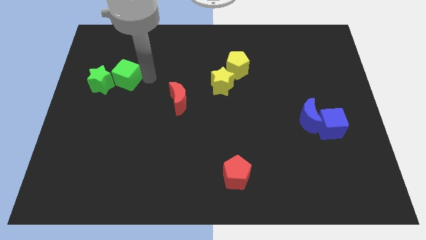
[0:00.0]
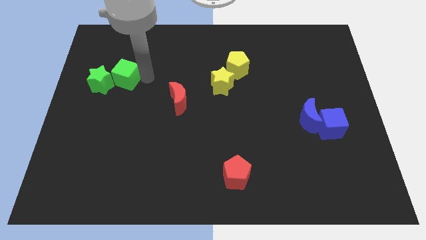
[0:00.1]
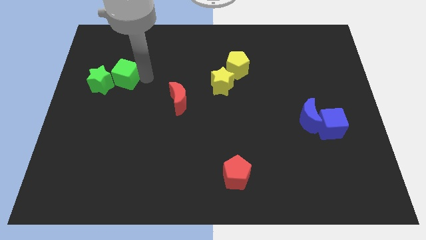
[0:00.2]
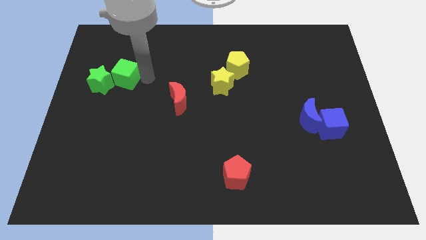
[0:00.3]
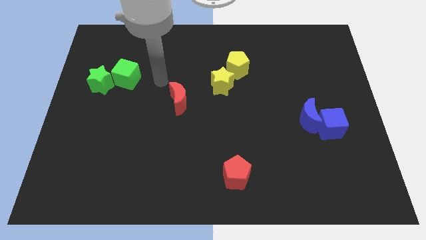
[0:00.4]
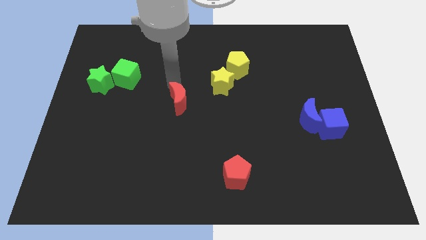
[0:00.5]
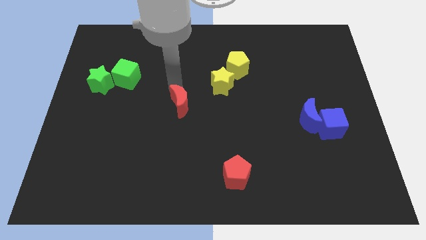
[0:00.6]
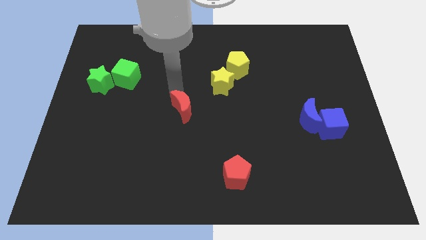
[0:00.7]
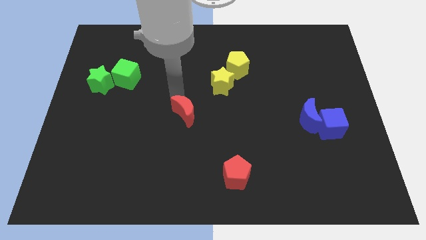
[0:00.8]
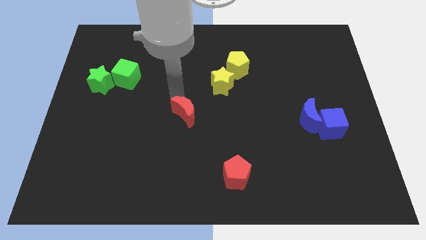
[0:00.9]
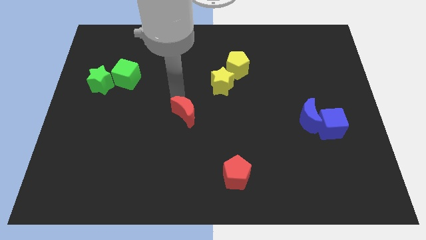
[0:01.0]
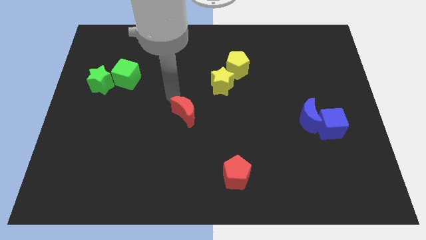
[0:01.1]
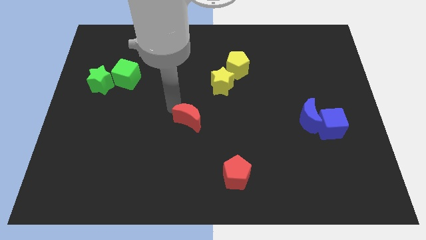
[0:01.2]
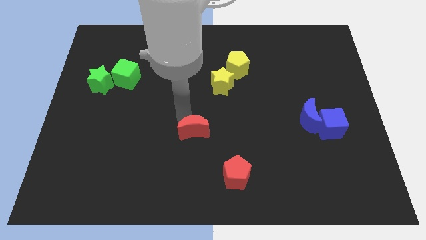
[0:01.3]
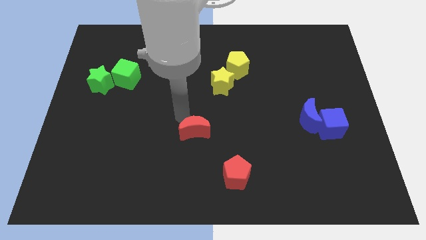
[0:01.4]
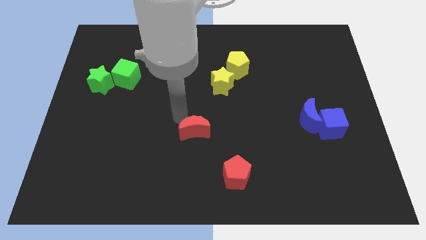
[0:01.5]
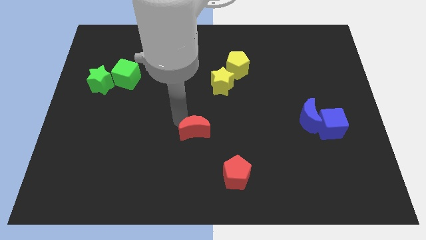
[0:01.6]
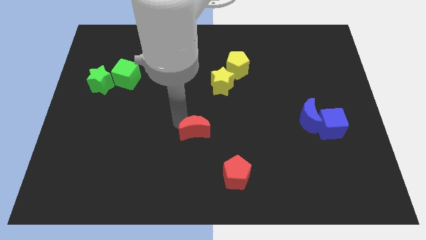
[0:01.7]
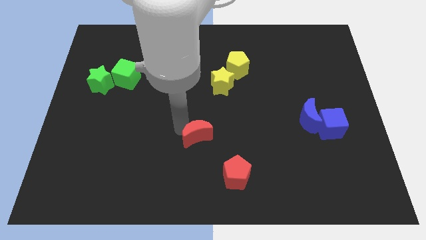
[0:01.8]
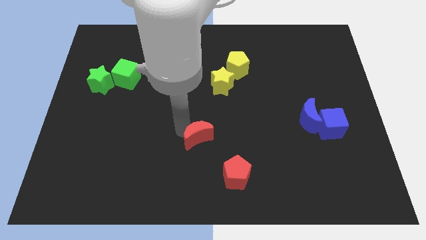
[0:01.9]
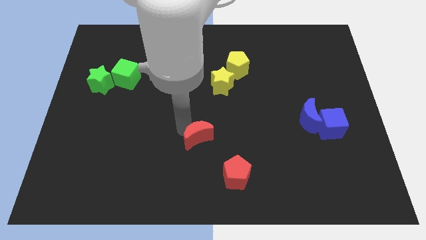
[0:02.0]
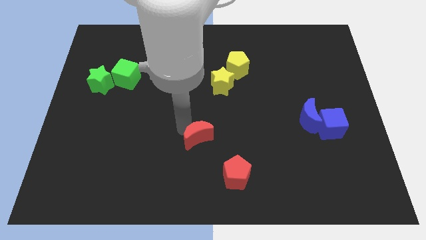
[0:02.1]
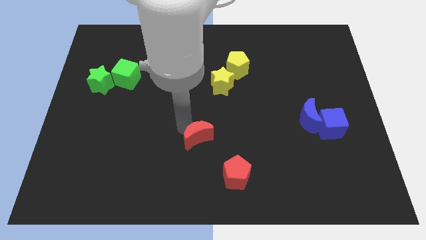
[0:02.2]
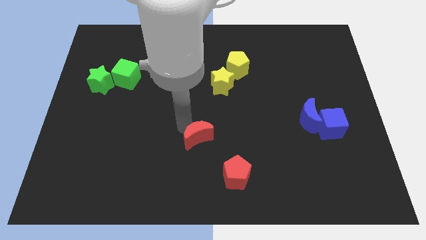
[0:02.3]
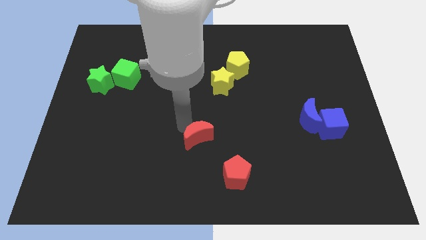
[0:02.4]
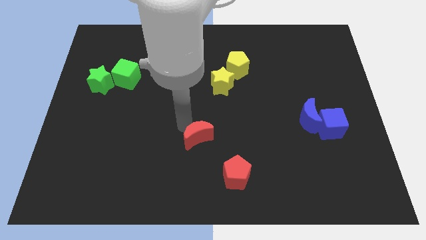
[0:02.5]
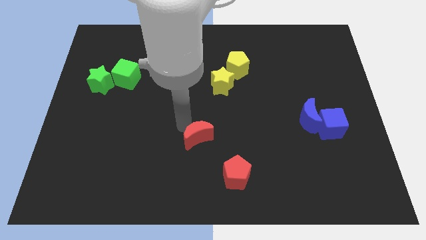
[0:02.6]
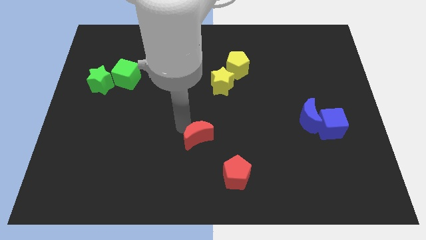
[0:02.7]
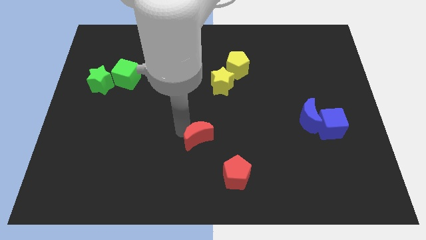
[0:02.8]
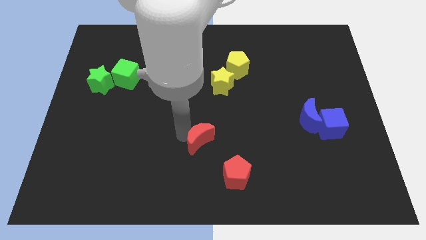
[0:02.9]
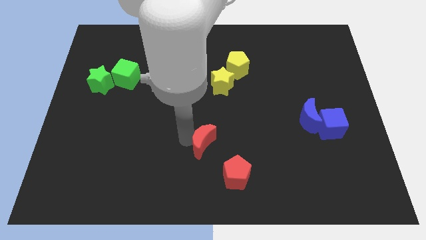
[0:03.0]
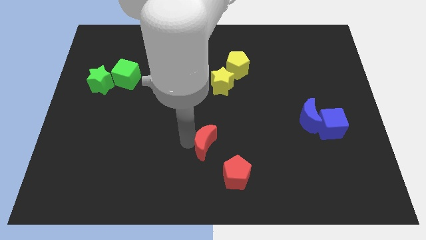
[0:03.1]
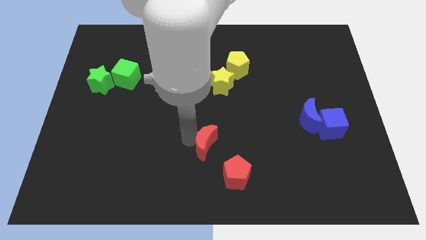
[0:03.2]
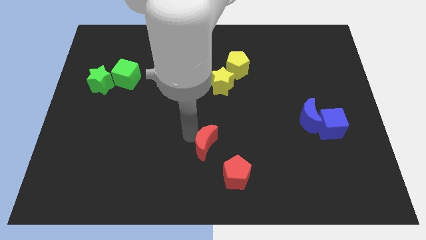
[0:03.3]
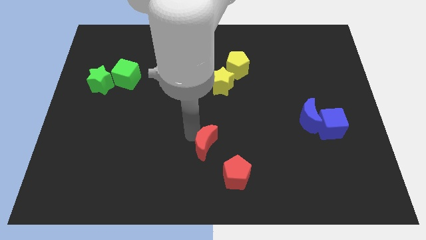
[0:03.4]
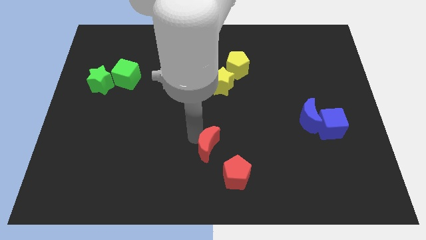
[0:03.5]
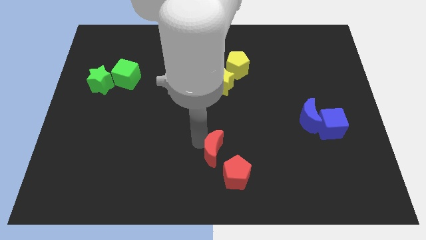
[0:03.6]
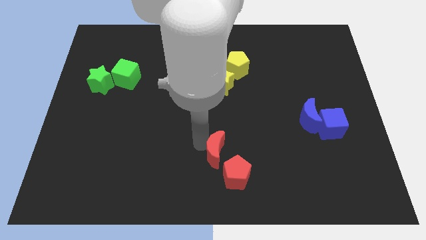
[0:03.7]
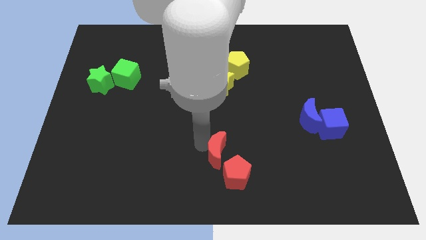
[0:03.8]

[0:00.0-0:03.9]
place the red crescent below the yellow star

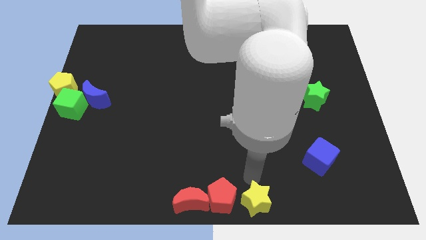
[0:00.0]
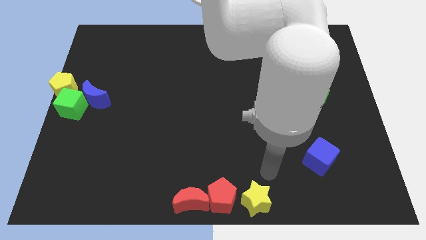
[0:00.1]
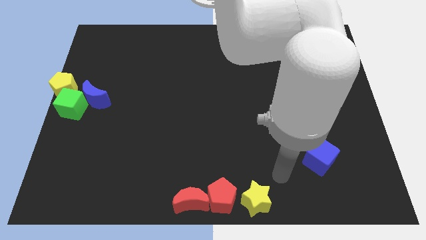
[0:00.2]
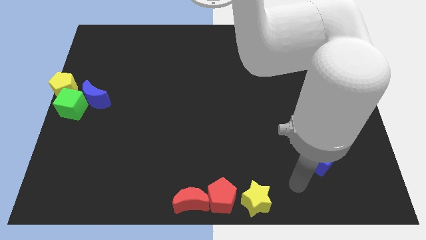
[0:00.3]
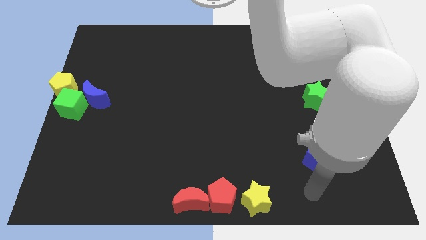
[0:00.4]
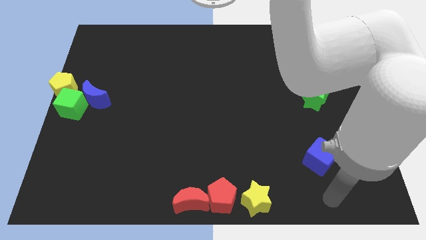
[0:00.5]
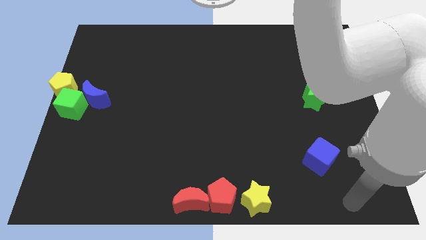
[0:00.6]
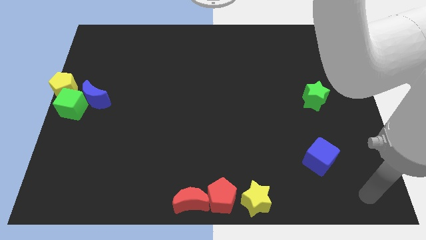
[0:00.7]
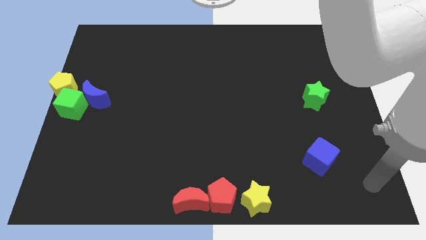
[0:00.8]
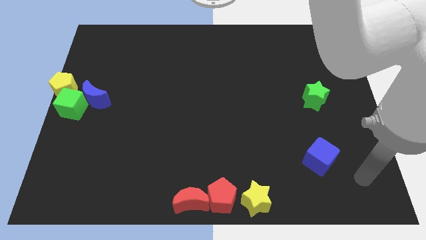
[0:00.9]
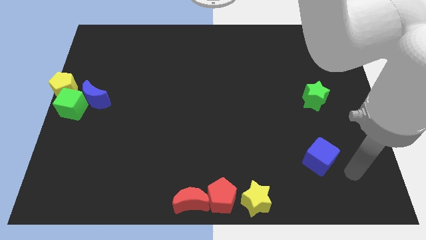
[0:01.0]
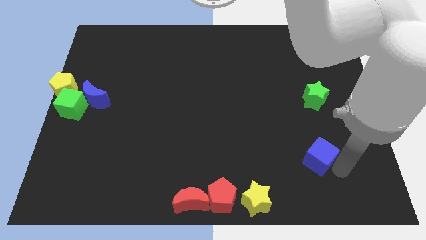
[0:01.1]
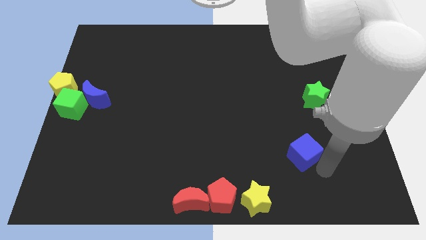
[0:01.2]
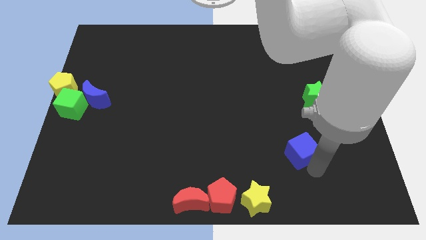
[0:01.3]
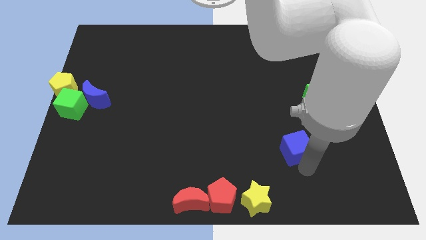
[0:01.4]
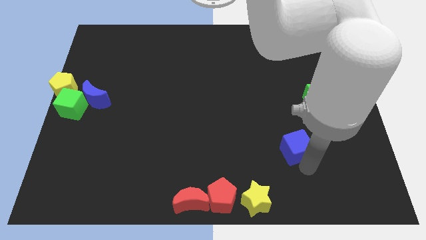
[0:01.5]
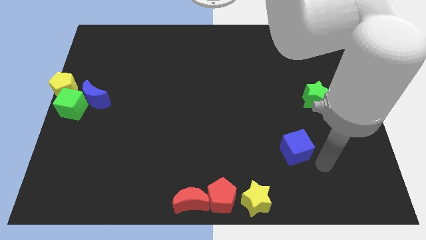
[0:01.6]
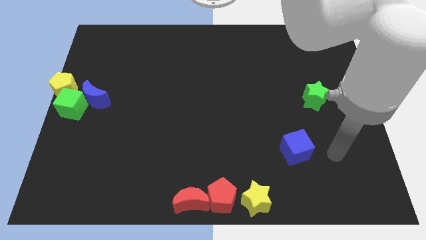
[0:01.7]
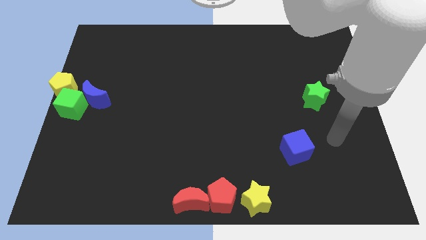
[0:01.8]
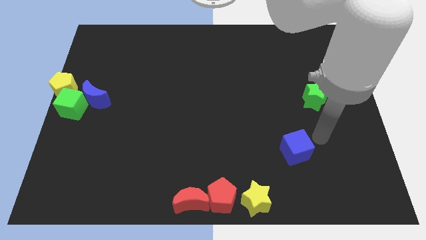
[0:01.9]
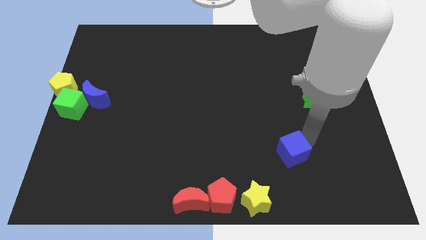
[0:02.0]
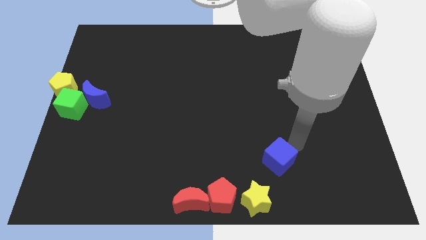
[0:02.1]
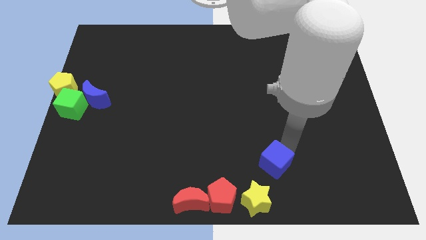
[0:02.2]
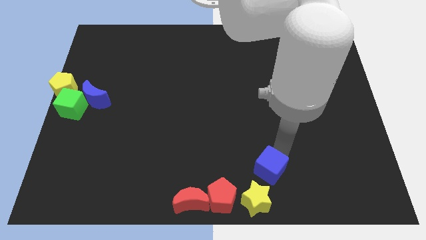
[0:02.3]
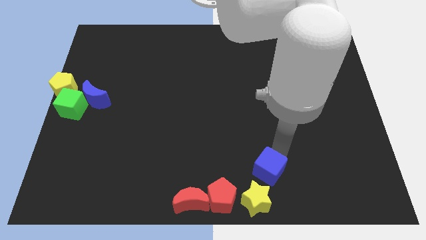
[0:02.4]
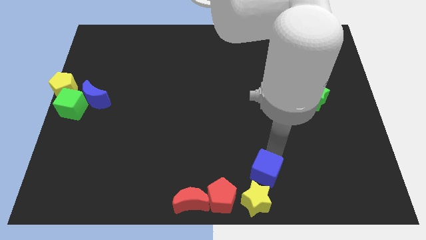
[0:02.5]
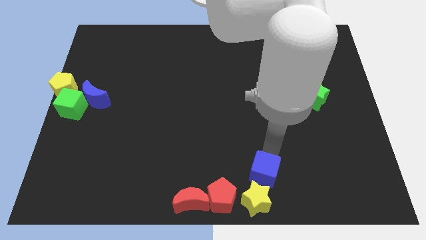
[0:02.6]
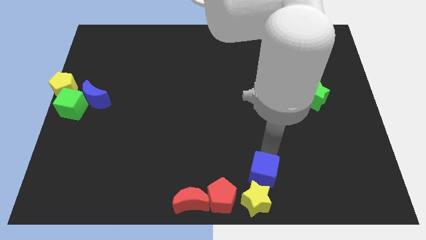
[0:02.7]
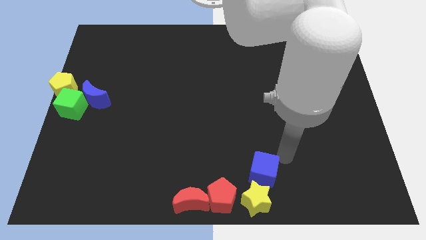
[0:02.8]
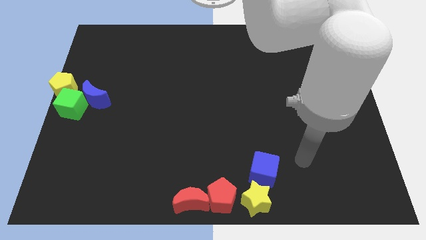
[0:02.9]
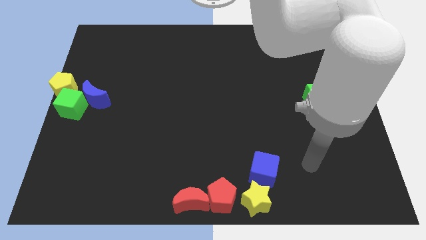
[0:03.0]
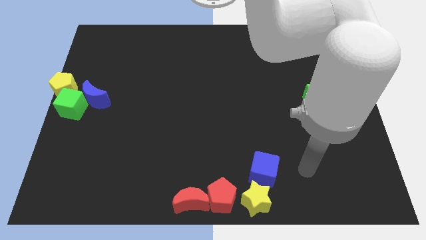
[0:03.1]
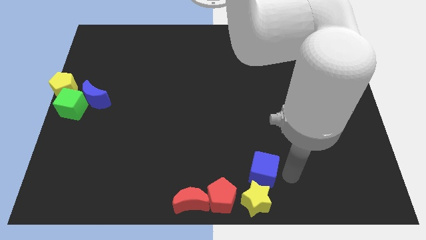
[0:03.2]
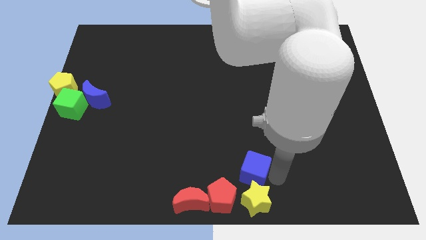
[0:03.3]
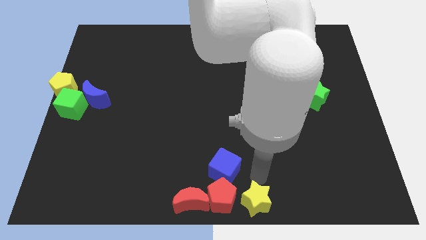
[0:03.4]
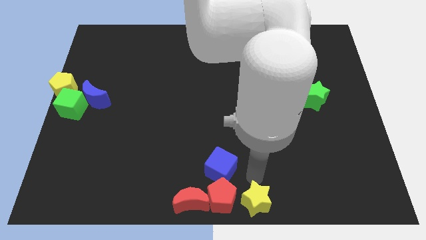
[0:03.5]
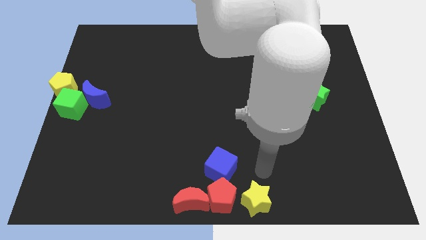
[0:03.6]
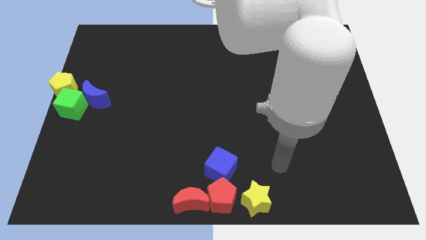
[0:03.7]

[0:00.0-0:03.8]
place blue cube to the top of red pentagon

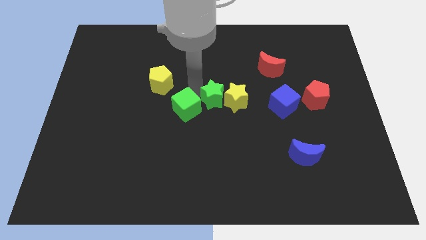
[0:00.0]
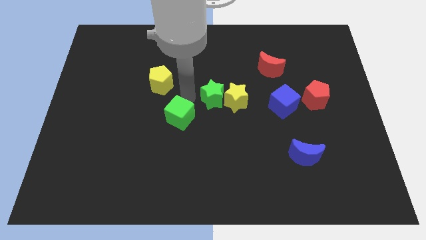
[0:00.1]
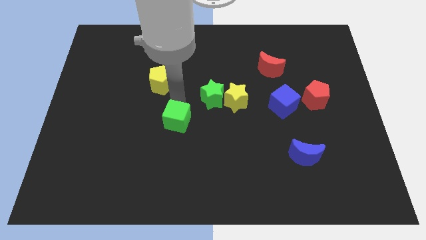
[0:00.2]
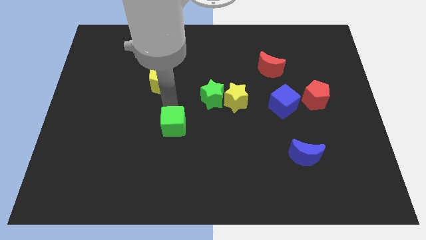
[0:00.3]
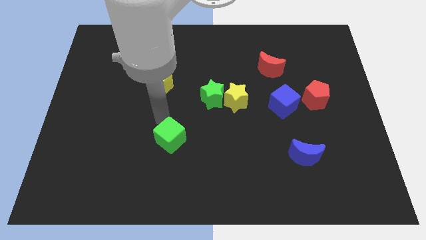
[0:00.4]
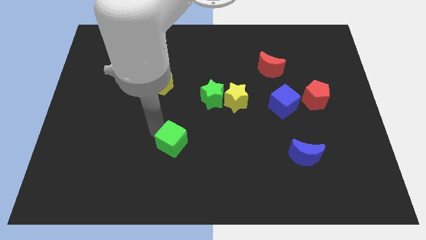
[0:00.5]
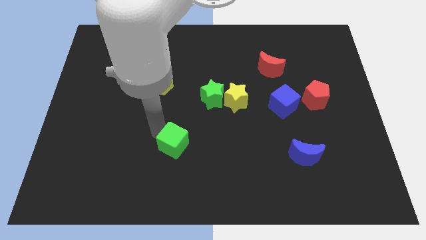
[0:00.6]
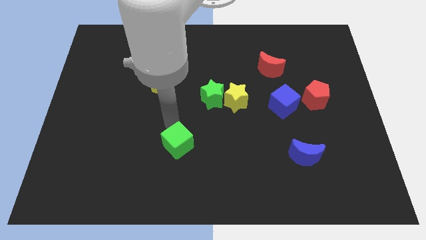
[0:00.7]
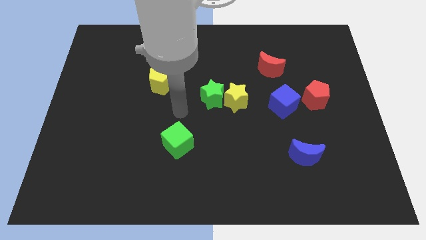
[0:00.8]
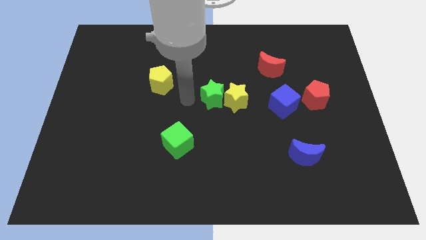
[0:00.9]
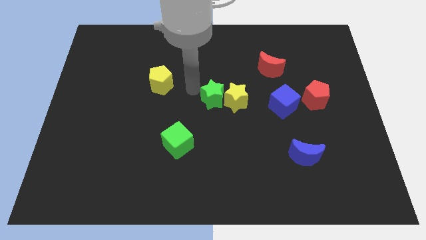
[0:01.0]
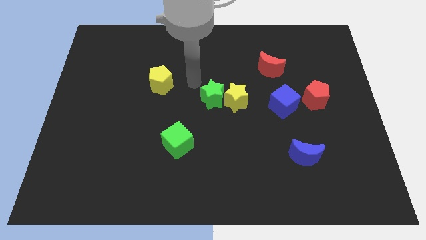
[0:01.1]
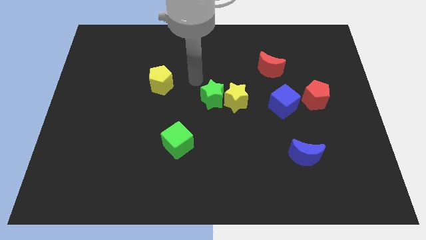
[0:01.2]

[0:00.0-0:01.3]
push the green cube away from the green star
